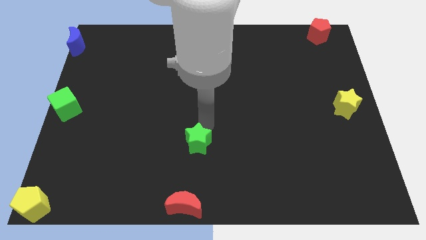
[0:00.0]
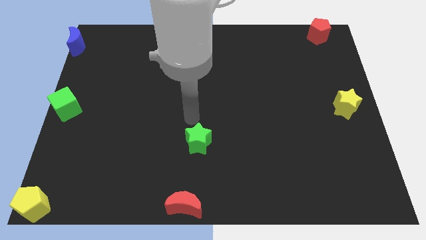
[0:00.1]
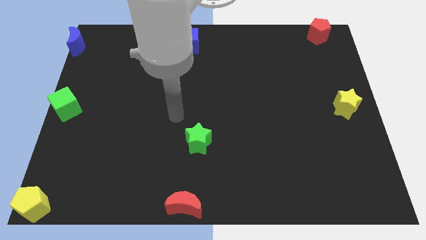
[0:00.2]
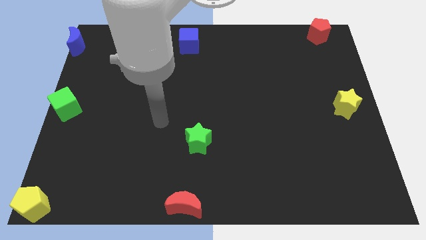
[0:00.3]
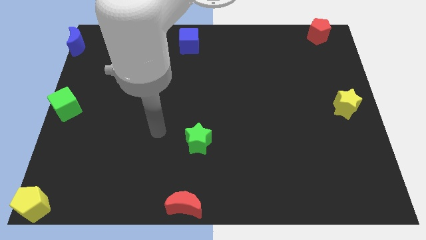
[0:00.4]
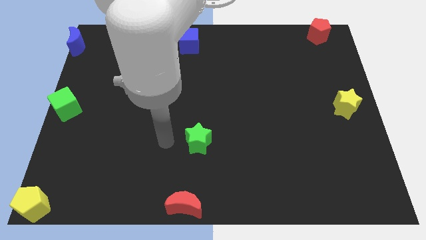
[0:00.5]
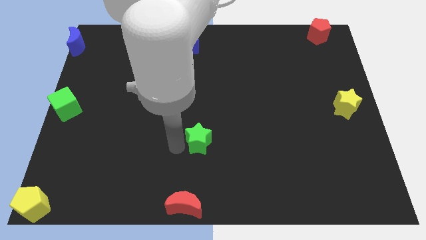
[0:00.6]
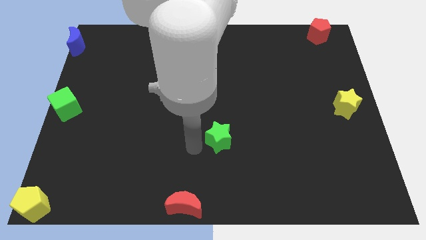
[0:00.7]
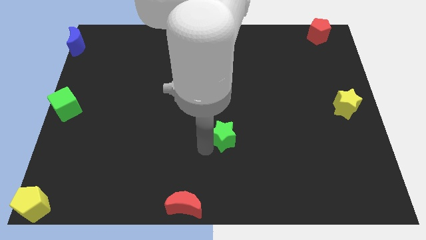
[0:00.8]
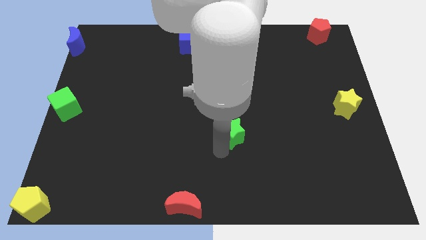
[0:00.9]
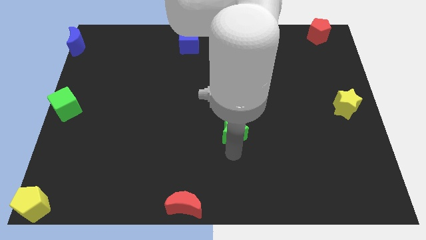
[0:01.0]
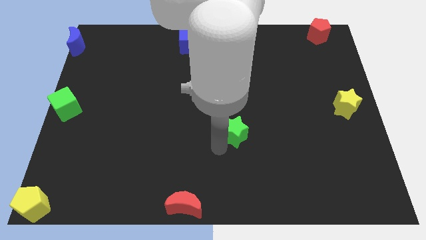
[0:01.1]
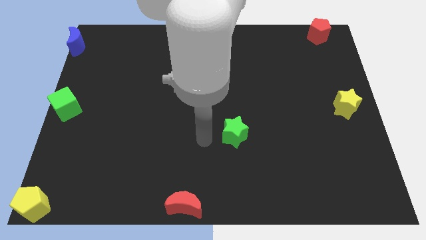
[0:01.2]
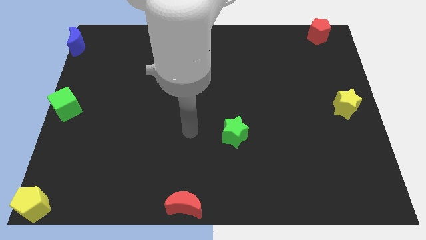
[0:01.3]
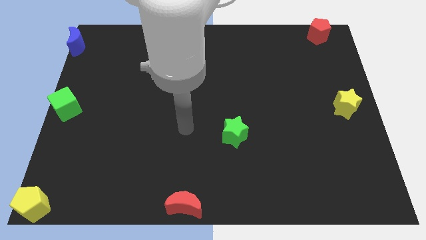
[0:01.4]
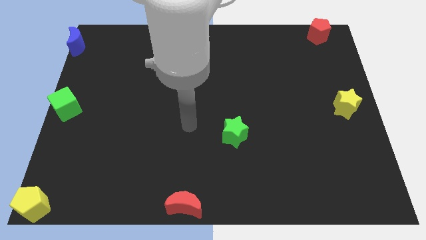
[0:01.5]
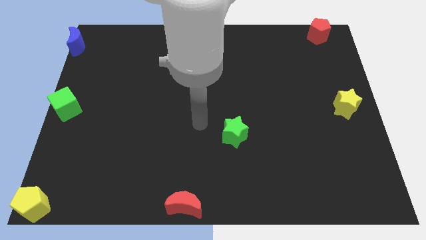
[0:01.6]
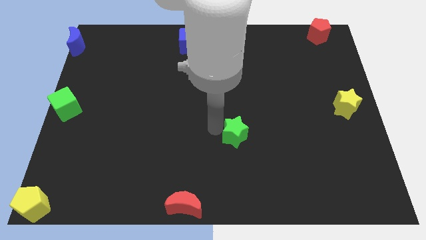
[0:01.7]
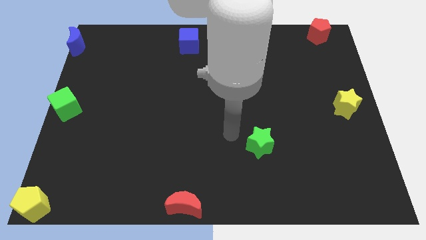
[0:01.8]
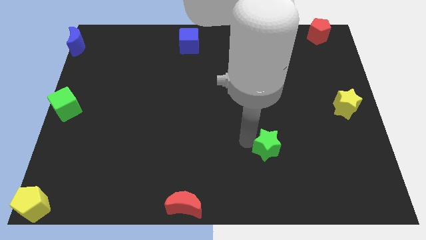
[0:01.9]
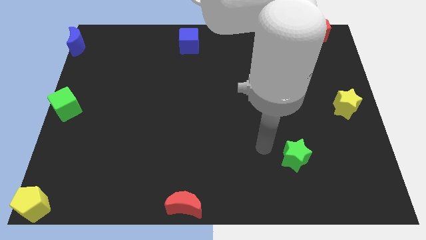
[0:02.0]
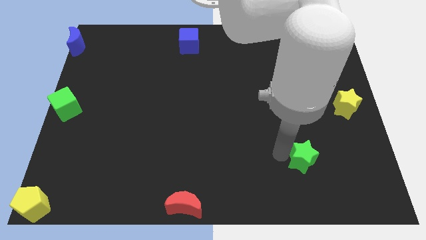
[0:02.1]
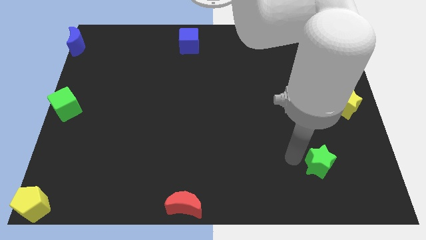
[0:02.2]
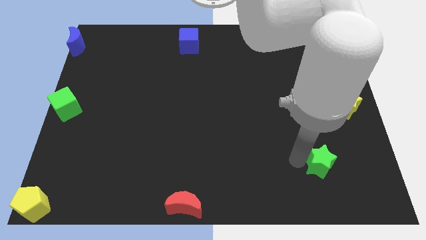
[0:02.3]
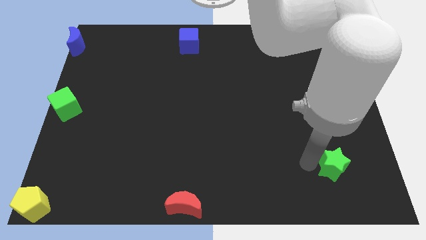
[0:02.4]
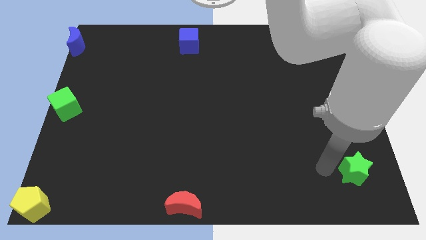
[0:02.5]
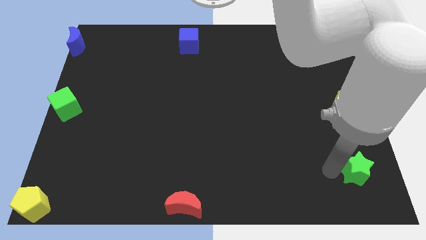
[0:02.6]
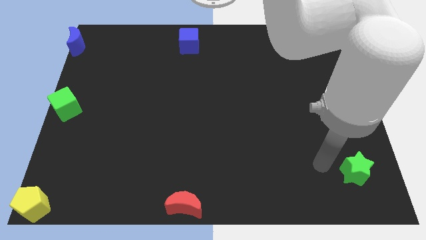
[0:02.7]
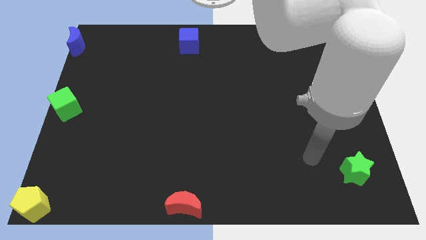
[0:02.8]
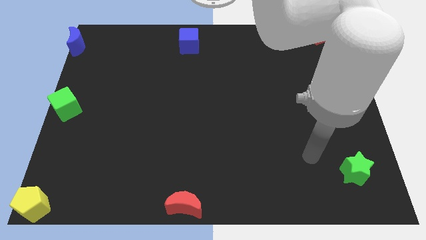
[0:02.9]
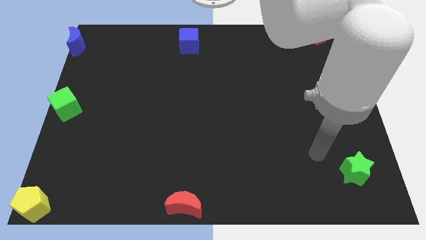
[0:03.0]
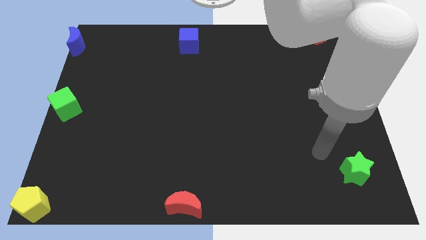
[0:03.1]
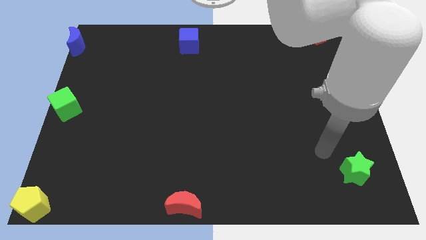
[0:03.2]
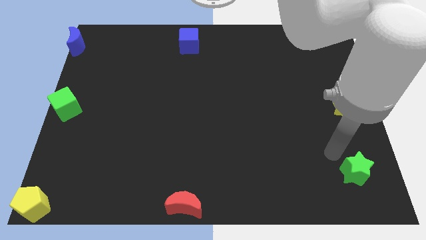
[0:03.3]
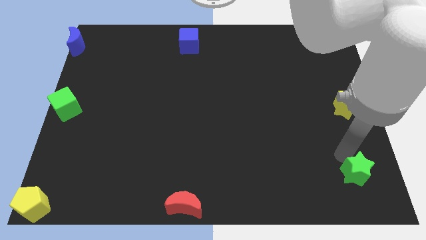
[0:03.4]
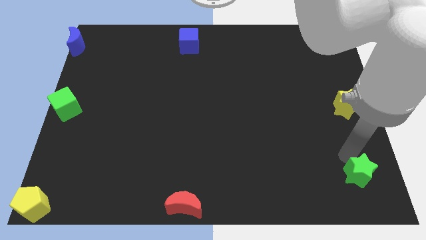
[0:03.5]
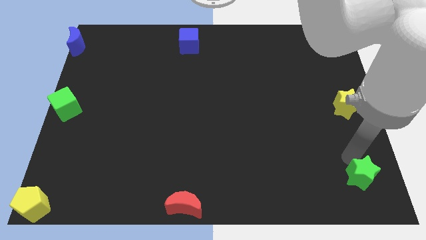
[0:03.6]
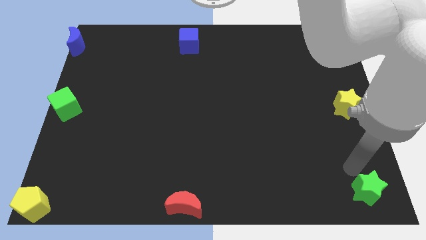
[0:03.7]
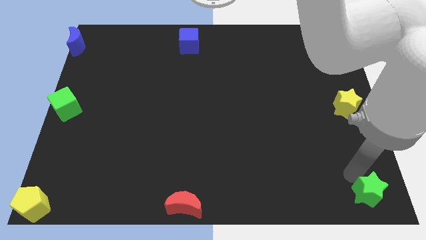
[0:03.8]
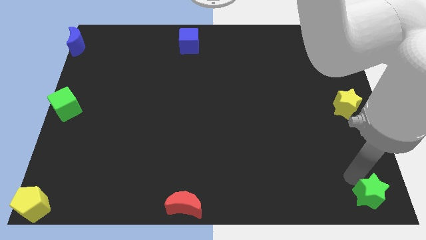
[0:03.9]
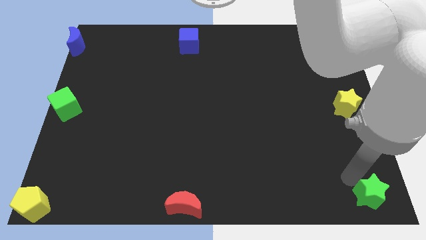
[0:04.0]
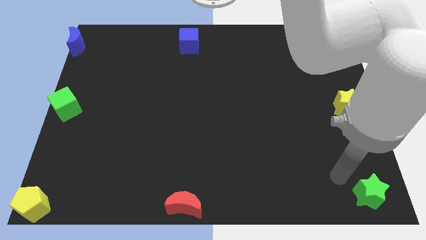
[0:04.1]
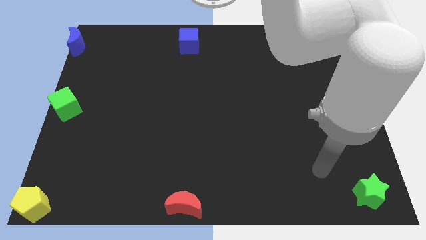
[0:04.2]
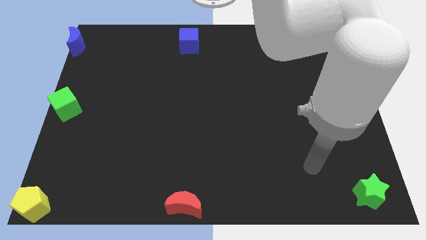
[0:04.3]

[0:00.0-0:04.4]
move the green star to the bottom right side

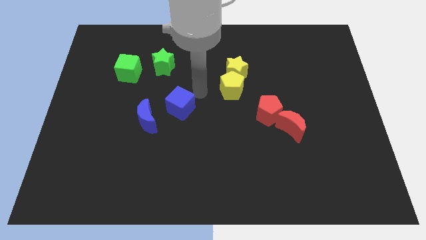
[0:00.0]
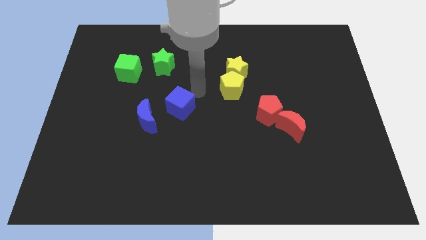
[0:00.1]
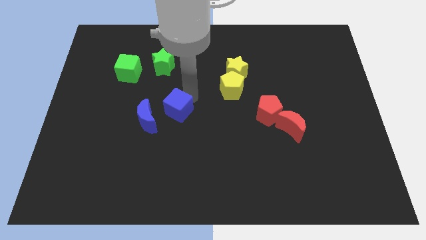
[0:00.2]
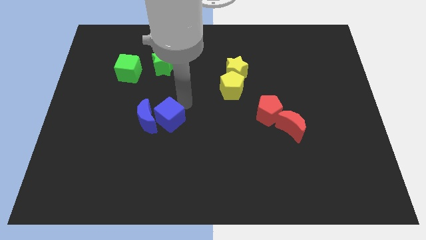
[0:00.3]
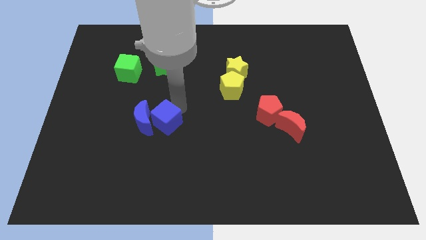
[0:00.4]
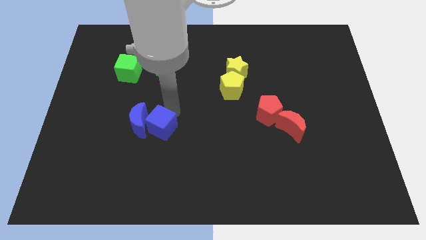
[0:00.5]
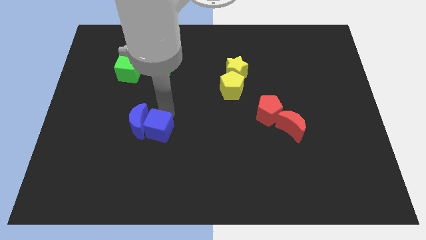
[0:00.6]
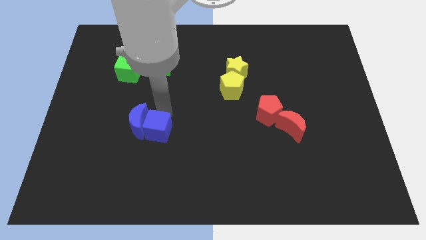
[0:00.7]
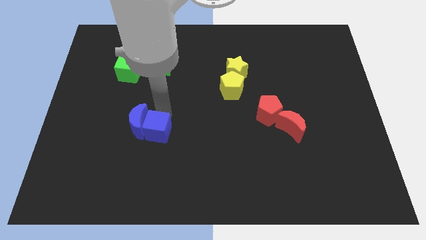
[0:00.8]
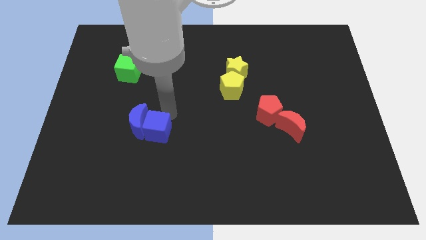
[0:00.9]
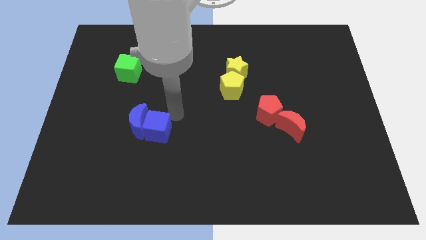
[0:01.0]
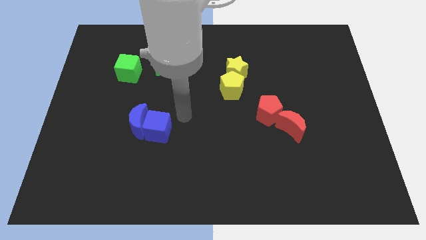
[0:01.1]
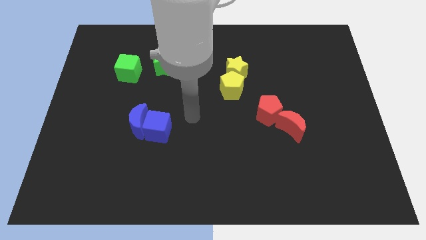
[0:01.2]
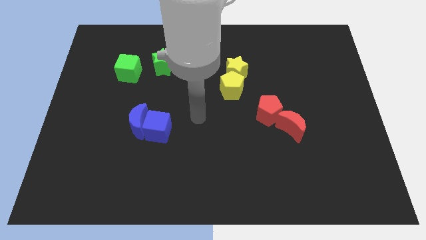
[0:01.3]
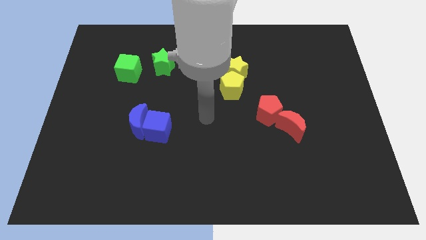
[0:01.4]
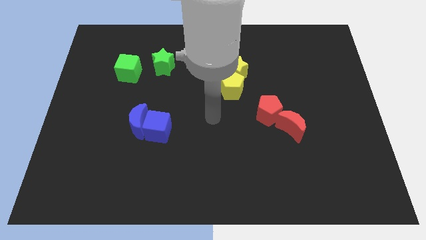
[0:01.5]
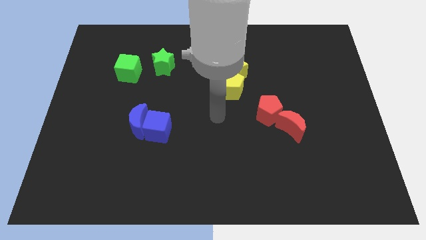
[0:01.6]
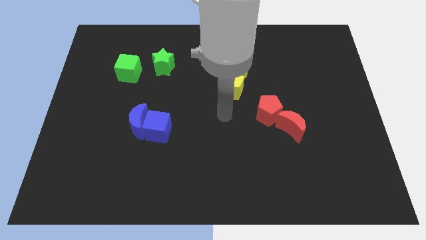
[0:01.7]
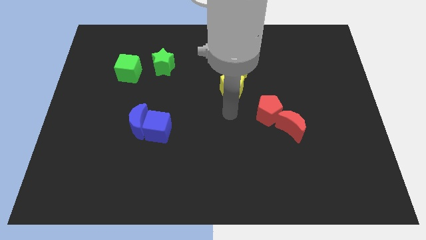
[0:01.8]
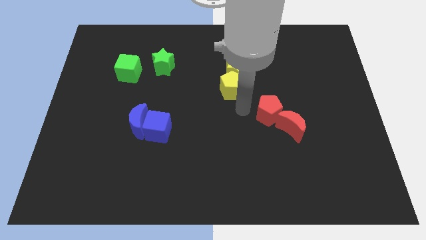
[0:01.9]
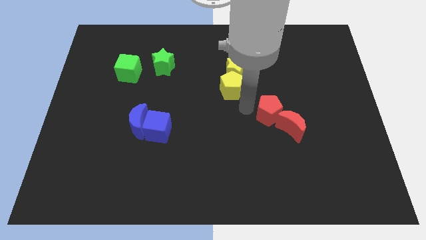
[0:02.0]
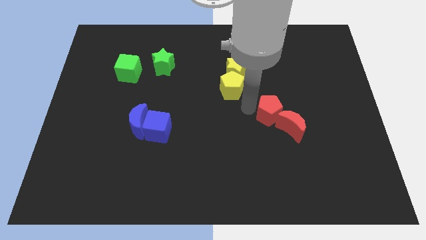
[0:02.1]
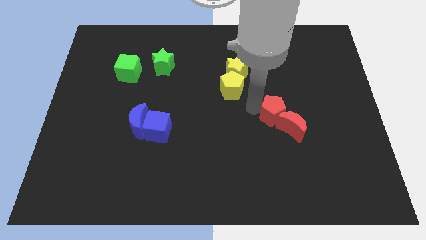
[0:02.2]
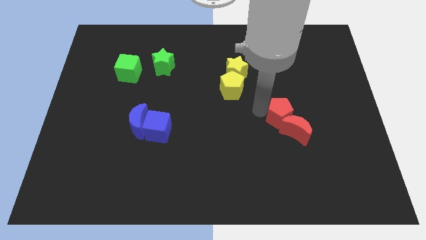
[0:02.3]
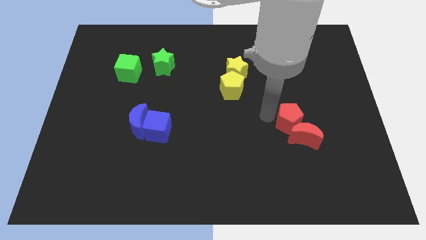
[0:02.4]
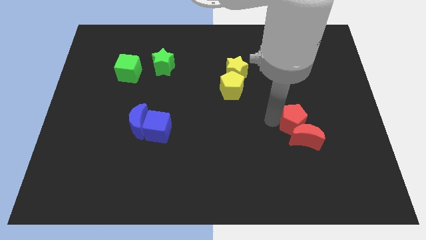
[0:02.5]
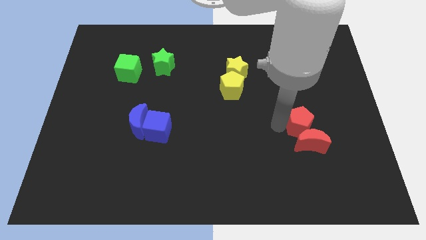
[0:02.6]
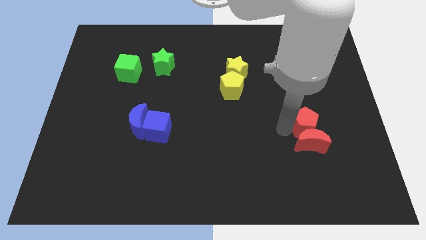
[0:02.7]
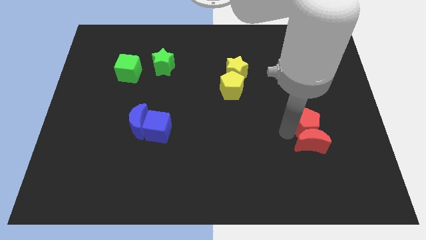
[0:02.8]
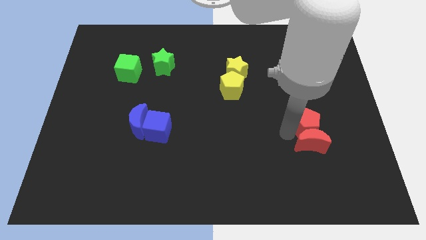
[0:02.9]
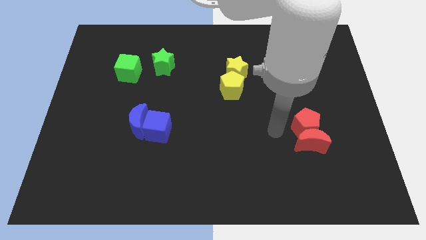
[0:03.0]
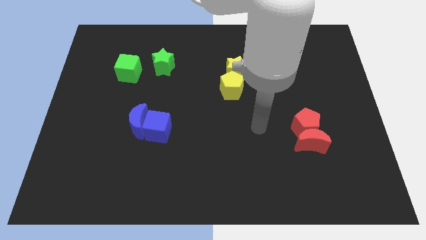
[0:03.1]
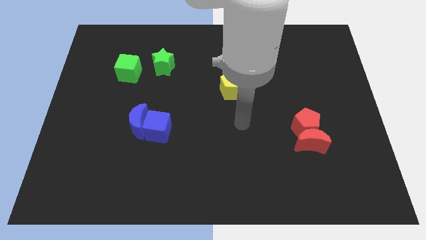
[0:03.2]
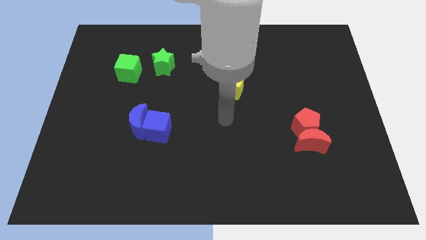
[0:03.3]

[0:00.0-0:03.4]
place the red blocks horizontally to the right side of the blue blocks

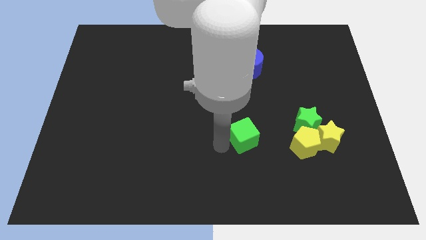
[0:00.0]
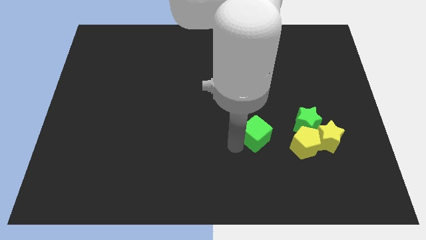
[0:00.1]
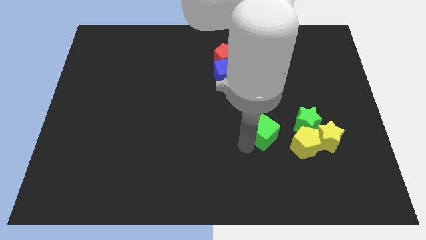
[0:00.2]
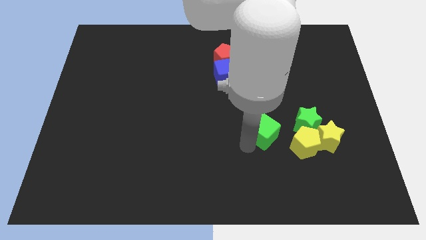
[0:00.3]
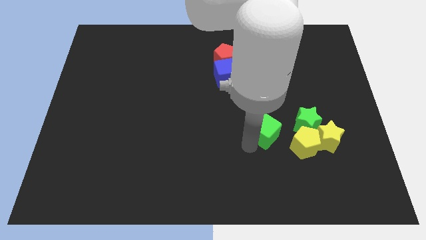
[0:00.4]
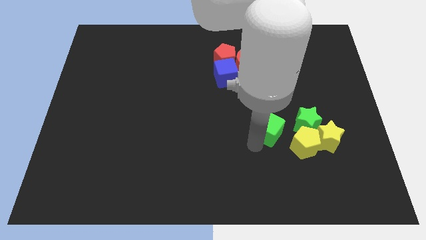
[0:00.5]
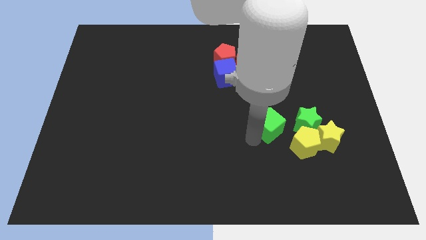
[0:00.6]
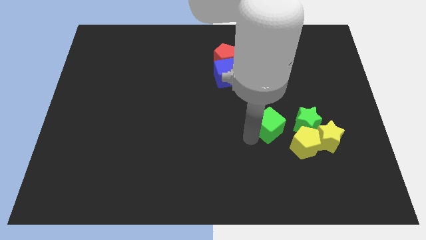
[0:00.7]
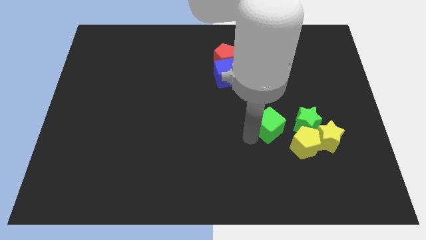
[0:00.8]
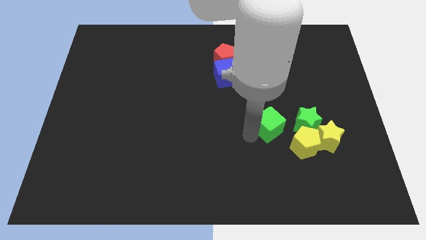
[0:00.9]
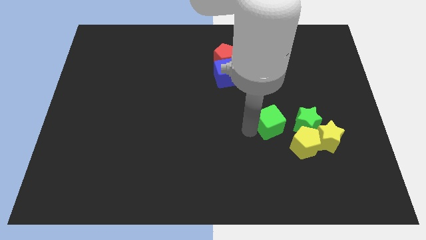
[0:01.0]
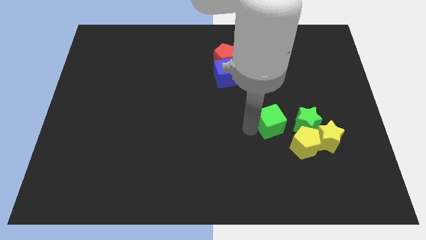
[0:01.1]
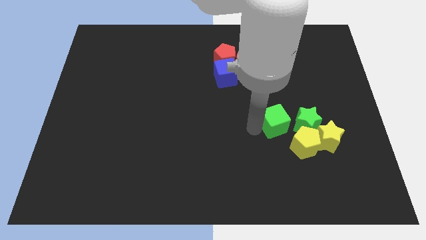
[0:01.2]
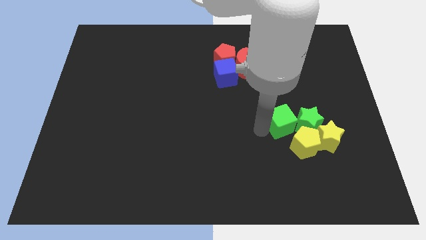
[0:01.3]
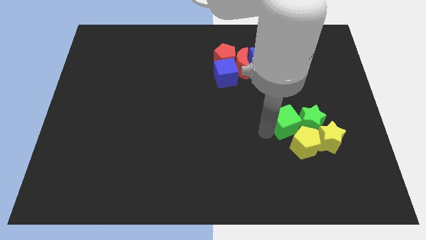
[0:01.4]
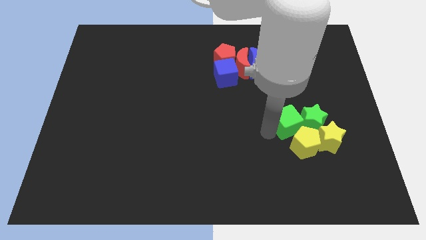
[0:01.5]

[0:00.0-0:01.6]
push the green cube to the left of the green star
